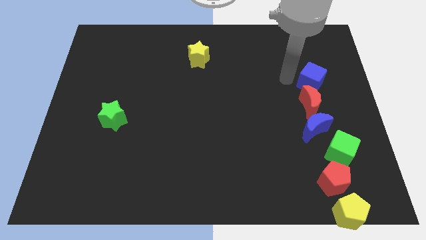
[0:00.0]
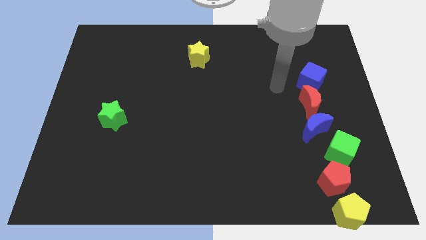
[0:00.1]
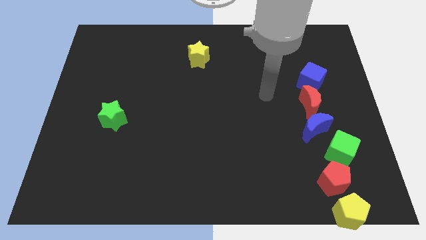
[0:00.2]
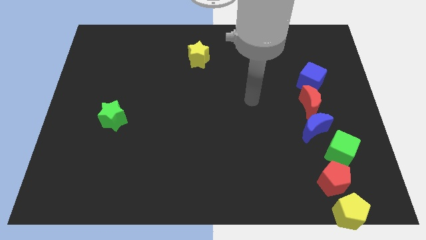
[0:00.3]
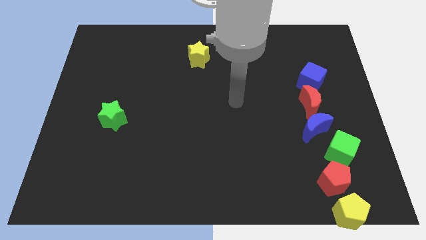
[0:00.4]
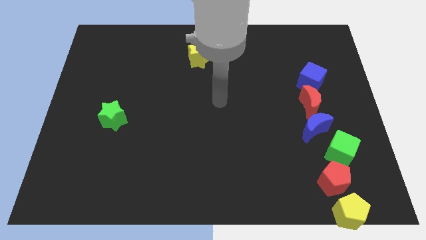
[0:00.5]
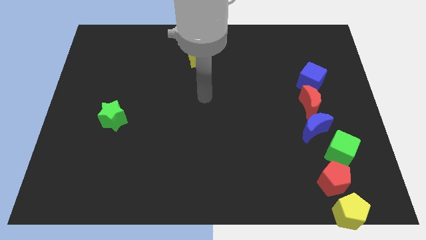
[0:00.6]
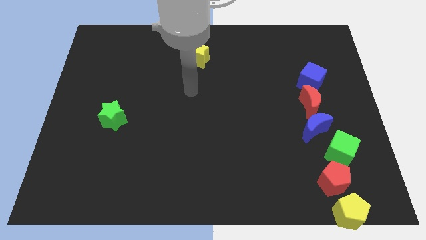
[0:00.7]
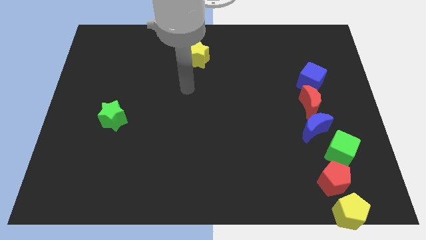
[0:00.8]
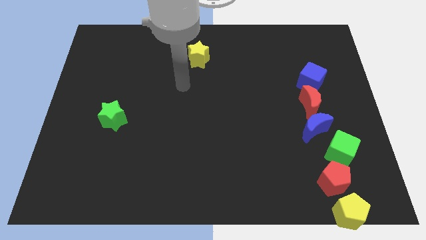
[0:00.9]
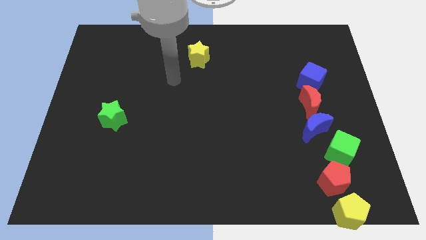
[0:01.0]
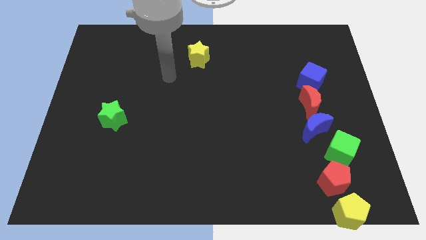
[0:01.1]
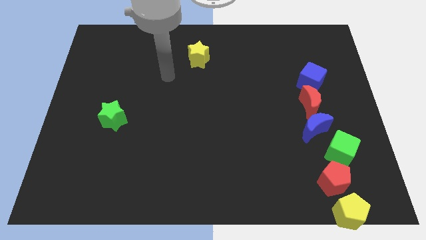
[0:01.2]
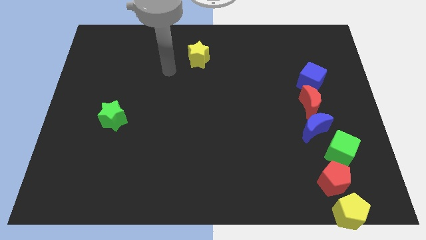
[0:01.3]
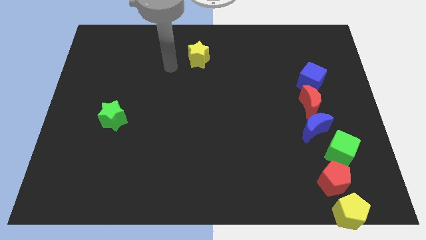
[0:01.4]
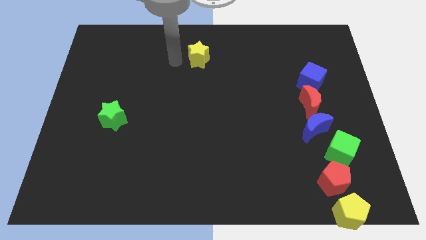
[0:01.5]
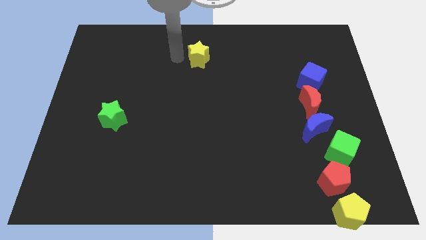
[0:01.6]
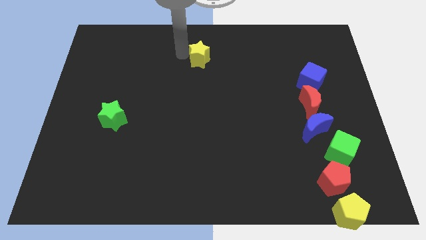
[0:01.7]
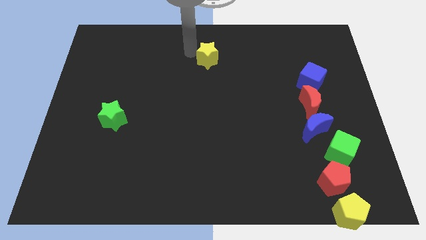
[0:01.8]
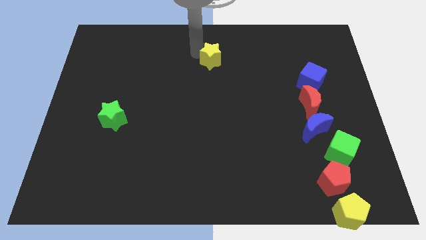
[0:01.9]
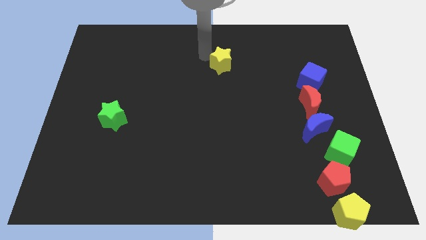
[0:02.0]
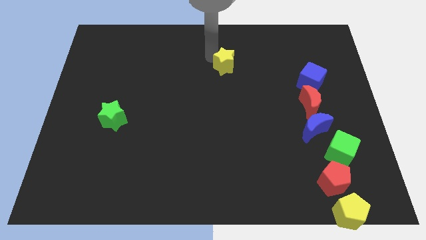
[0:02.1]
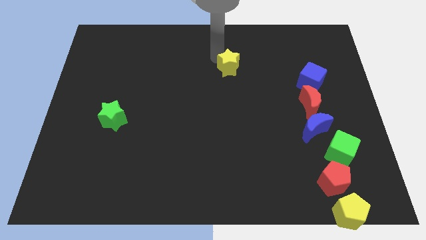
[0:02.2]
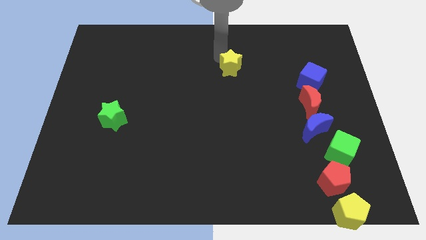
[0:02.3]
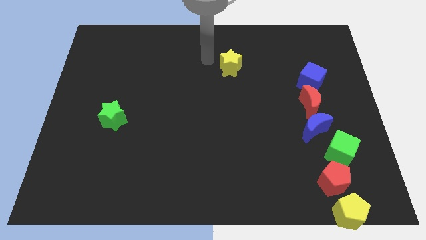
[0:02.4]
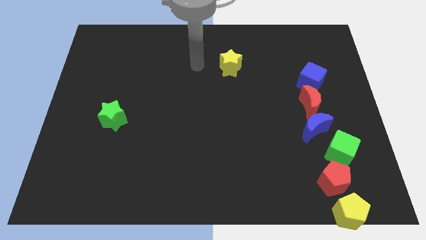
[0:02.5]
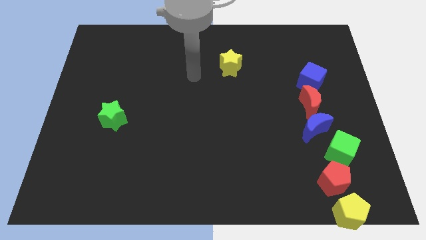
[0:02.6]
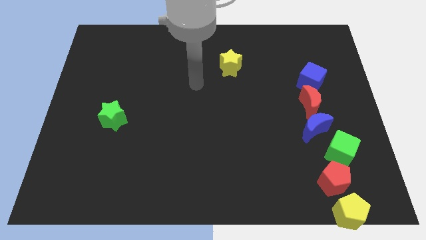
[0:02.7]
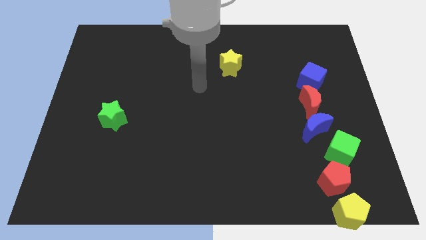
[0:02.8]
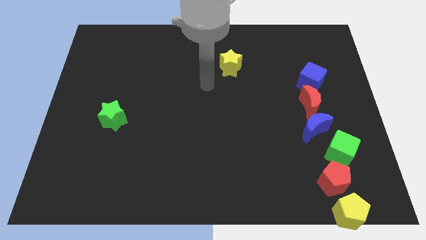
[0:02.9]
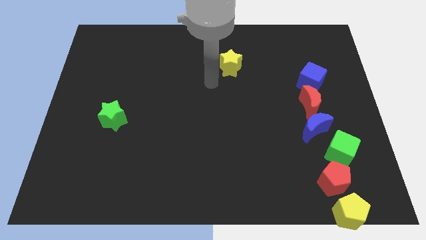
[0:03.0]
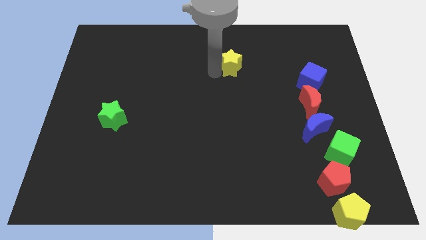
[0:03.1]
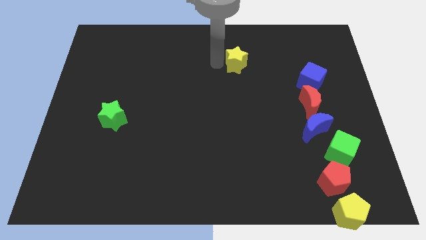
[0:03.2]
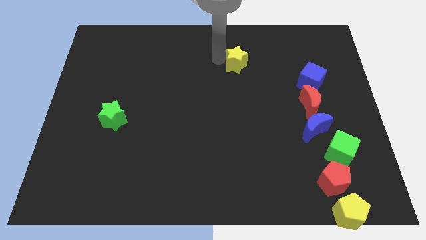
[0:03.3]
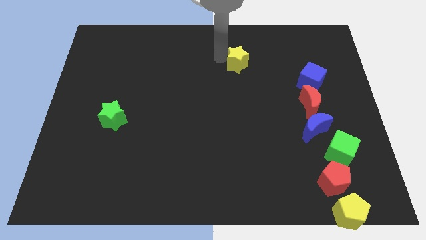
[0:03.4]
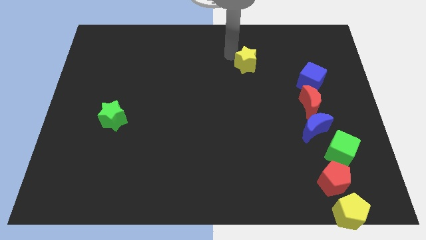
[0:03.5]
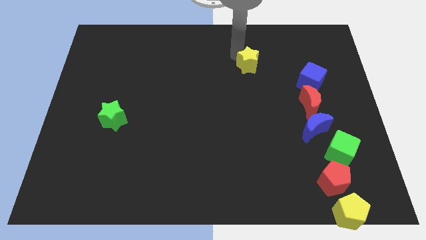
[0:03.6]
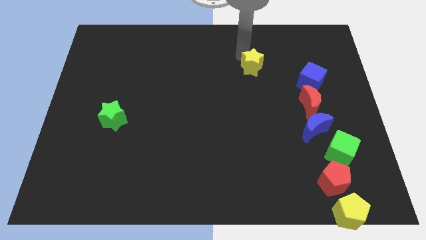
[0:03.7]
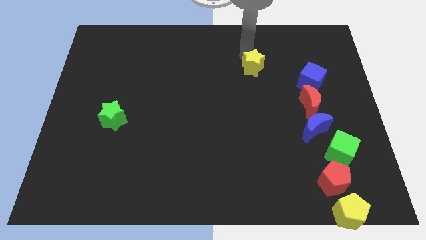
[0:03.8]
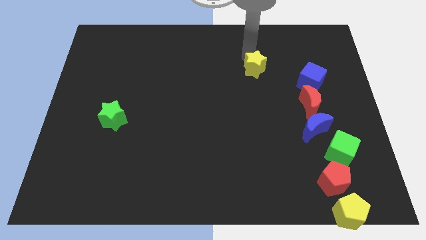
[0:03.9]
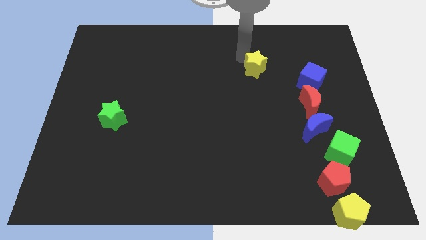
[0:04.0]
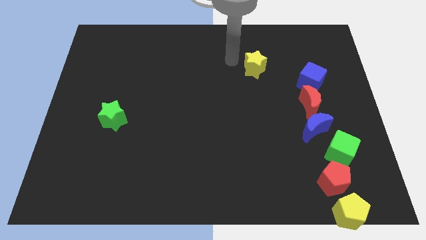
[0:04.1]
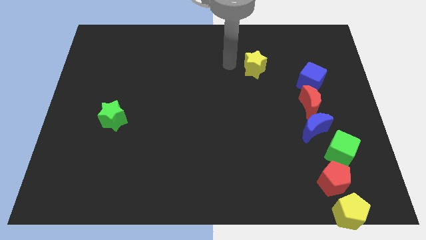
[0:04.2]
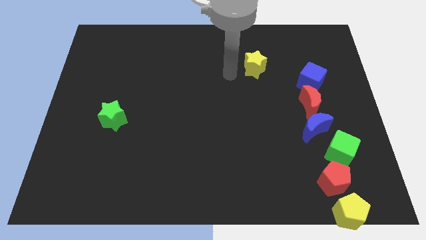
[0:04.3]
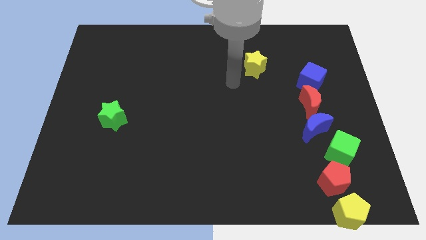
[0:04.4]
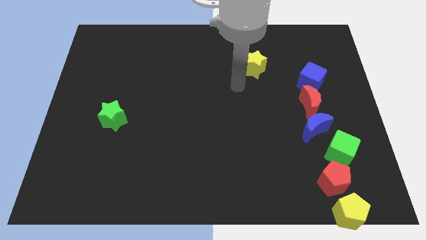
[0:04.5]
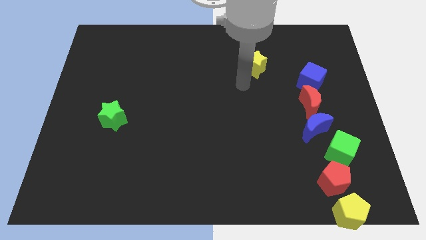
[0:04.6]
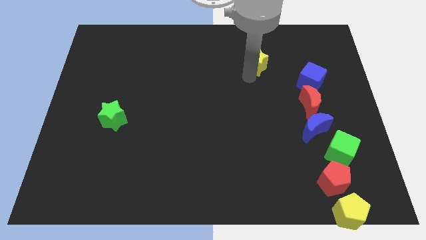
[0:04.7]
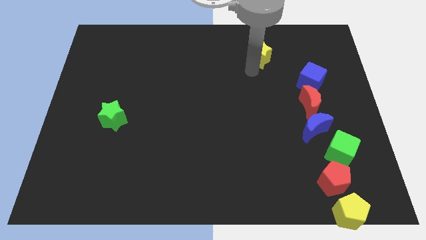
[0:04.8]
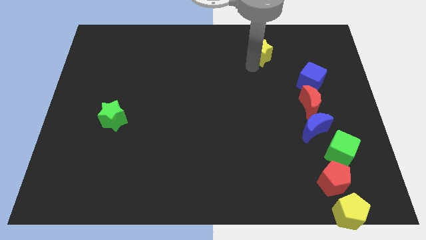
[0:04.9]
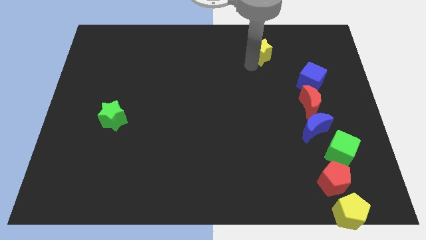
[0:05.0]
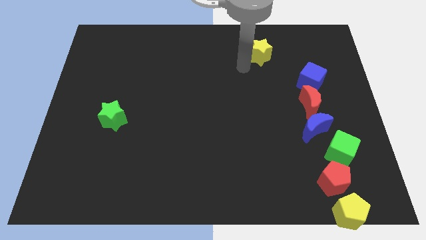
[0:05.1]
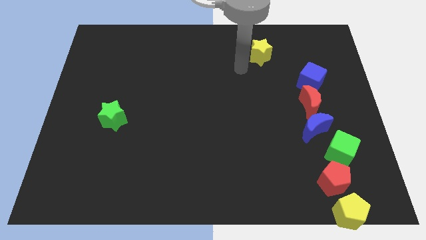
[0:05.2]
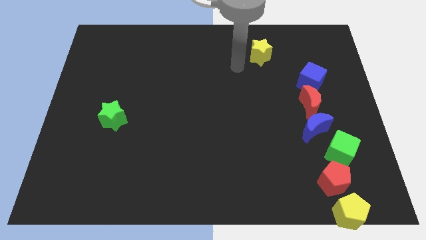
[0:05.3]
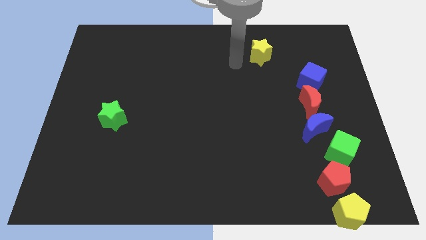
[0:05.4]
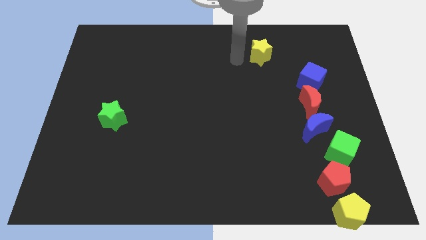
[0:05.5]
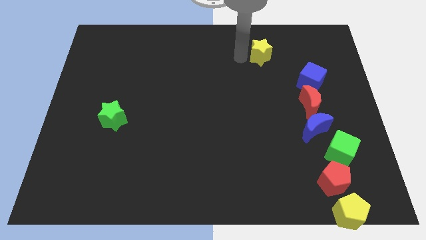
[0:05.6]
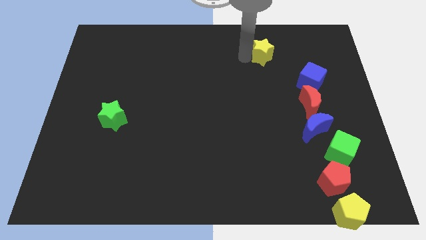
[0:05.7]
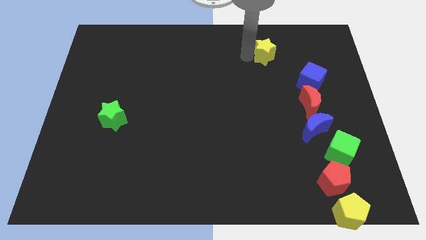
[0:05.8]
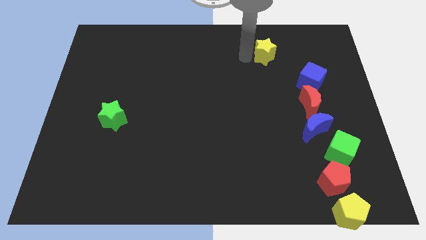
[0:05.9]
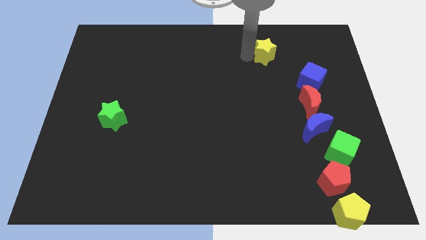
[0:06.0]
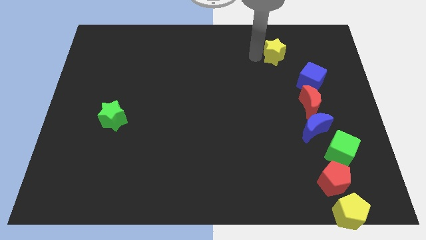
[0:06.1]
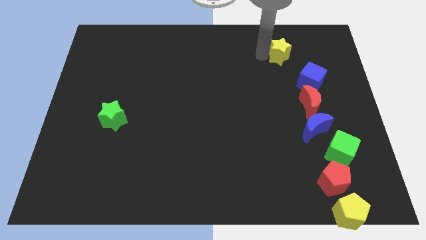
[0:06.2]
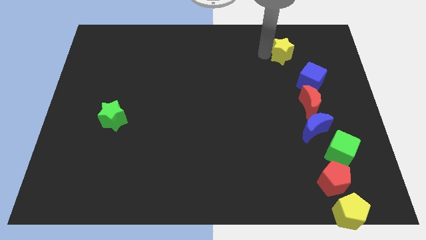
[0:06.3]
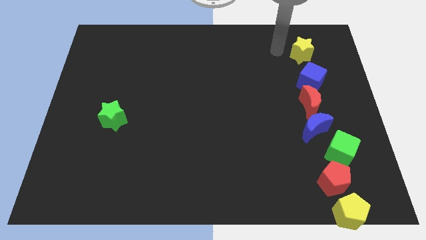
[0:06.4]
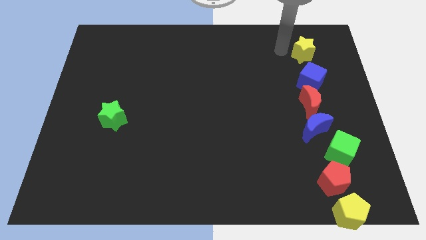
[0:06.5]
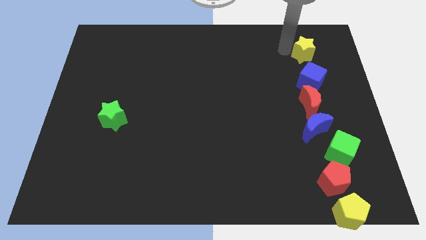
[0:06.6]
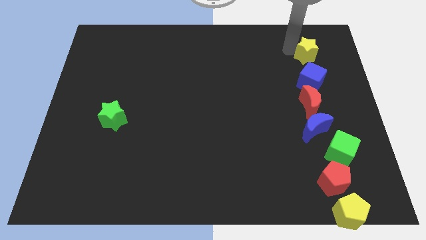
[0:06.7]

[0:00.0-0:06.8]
move the yellow star to the top of the blue cube

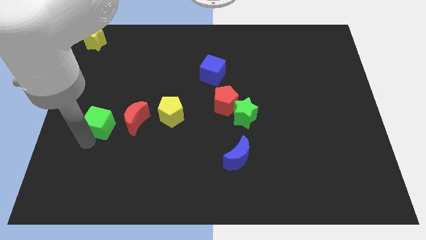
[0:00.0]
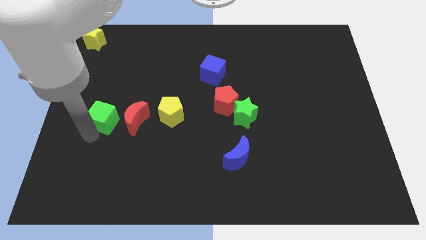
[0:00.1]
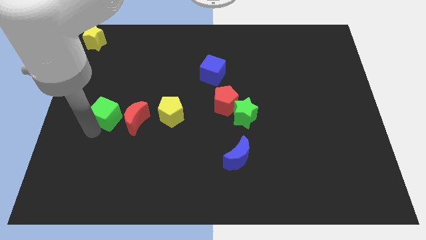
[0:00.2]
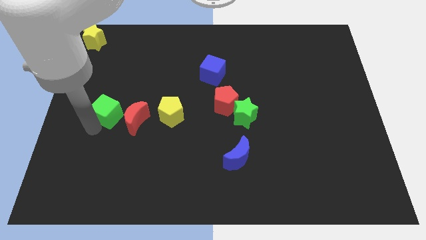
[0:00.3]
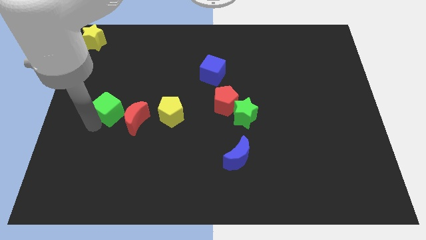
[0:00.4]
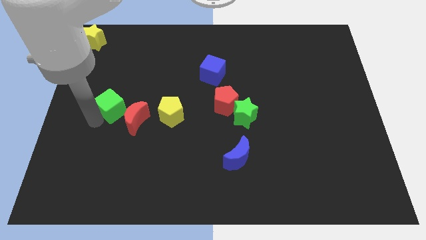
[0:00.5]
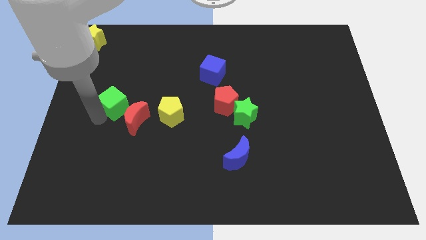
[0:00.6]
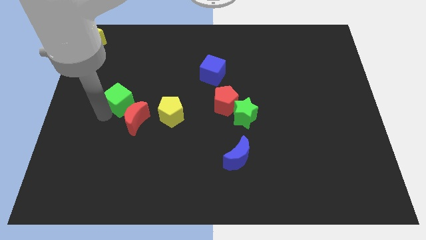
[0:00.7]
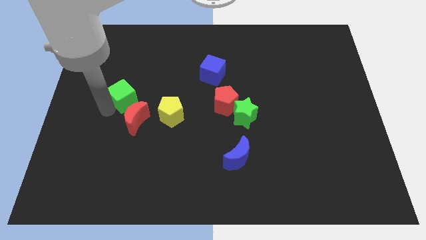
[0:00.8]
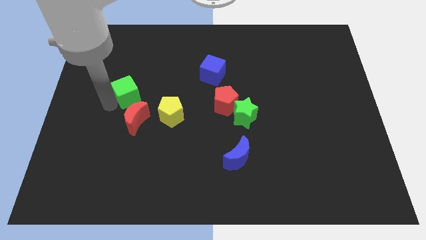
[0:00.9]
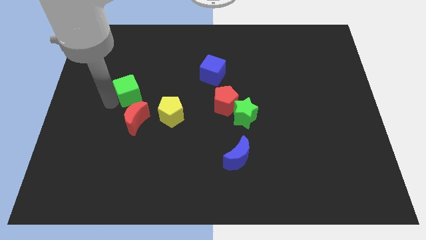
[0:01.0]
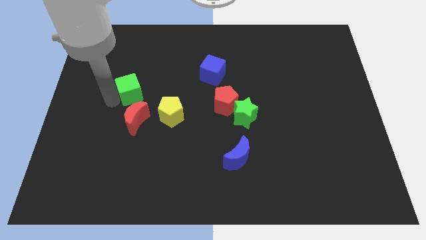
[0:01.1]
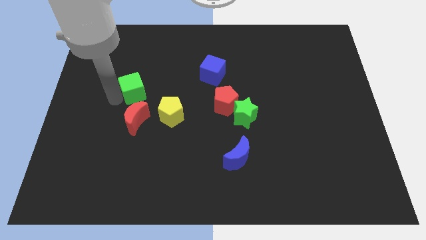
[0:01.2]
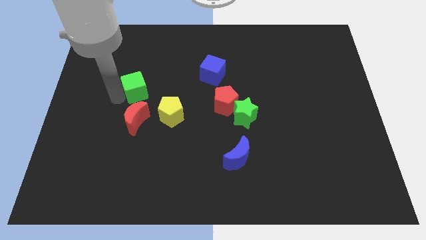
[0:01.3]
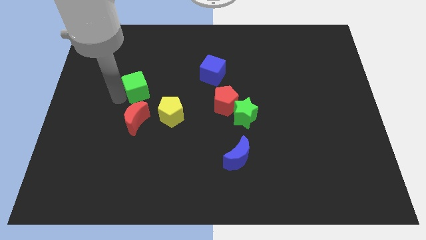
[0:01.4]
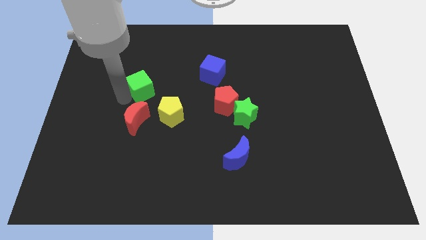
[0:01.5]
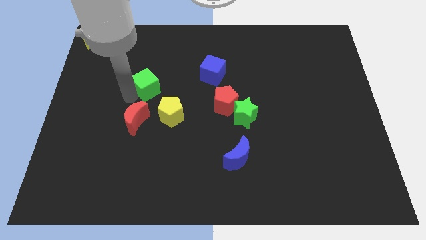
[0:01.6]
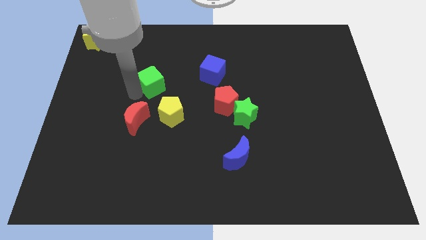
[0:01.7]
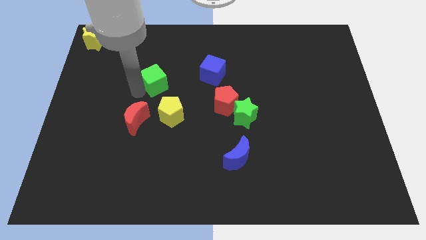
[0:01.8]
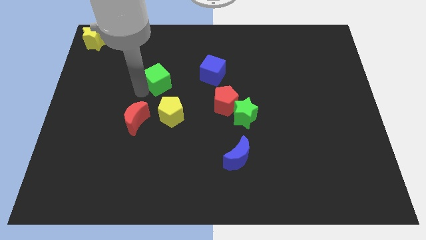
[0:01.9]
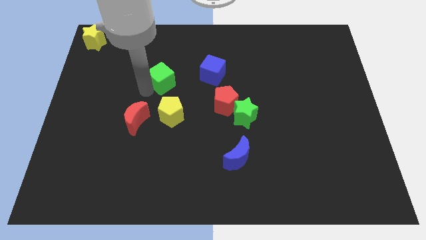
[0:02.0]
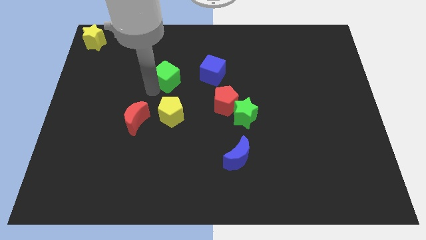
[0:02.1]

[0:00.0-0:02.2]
push the green cube above the yellow pentagon
